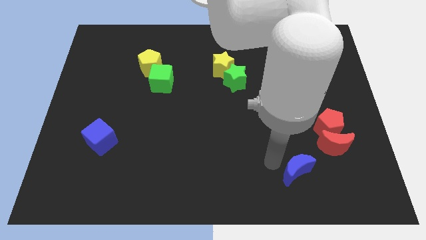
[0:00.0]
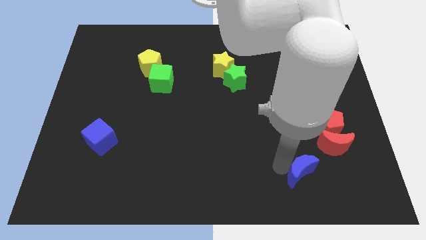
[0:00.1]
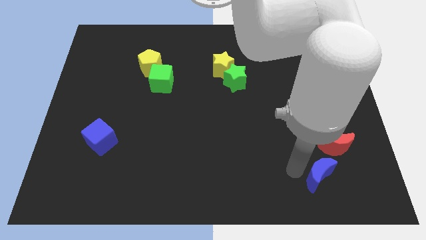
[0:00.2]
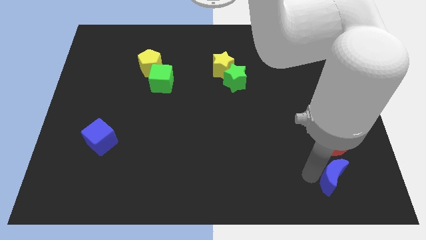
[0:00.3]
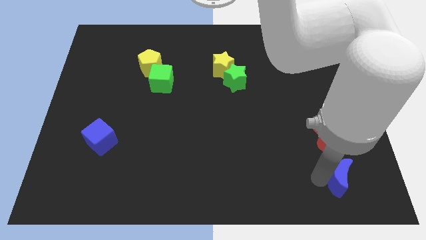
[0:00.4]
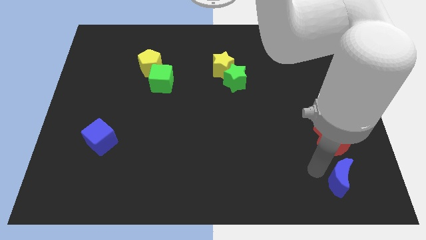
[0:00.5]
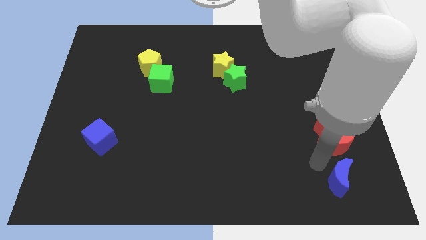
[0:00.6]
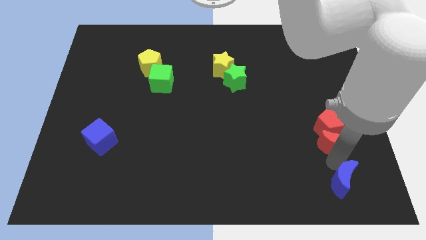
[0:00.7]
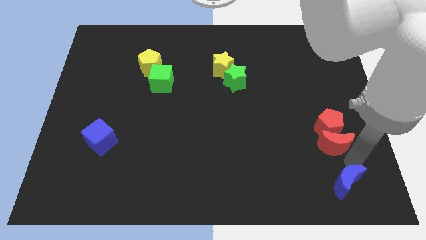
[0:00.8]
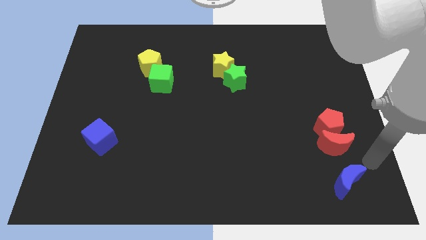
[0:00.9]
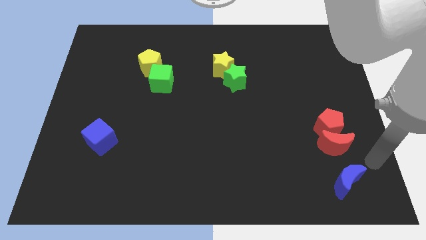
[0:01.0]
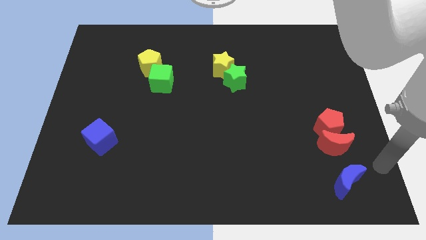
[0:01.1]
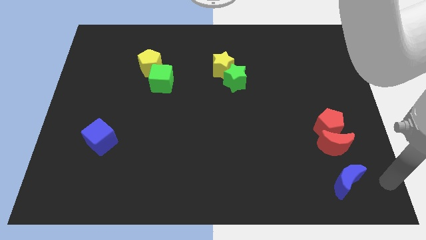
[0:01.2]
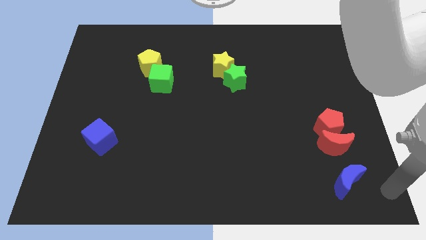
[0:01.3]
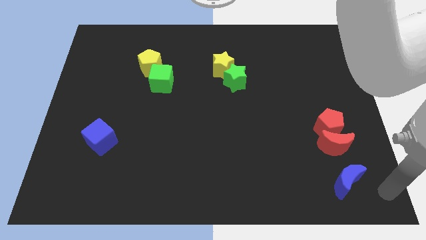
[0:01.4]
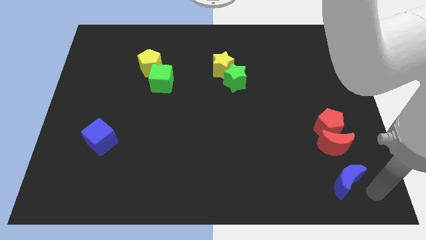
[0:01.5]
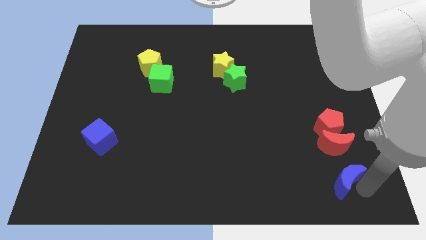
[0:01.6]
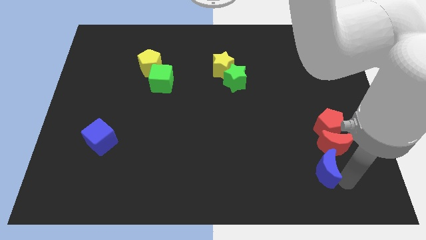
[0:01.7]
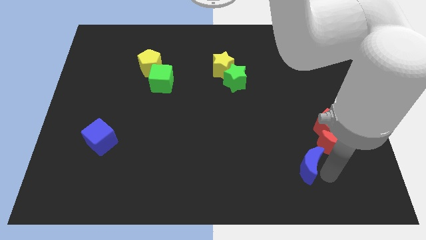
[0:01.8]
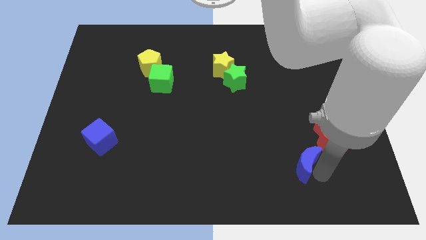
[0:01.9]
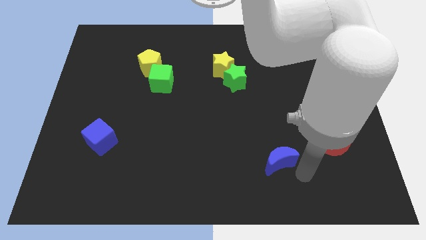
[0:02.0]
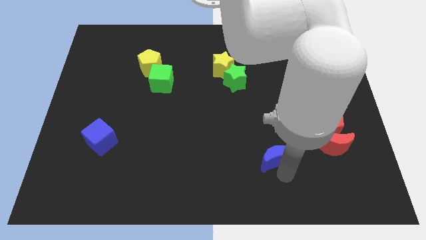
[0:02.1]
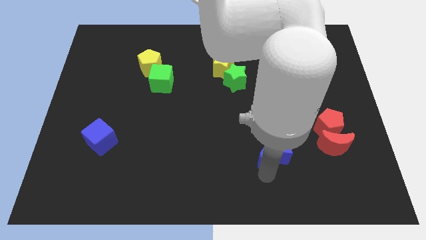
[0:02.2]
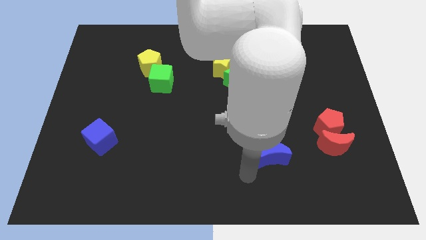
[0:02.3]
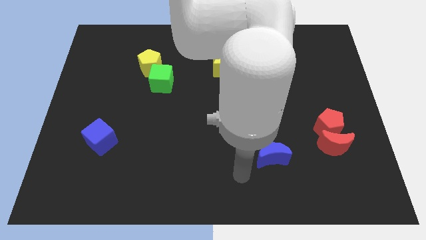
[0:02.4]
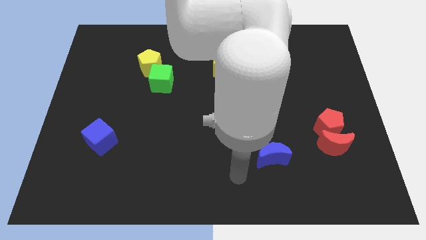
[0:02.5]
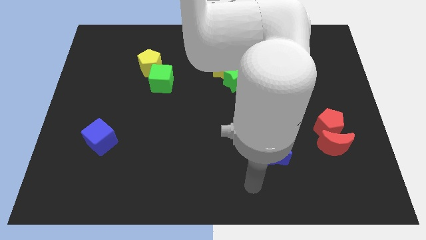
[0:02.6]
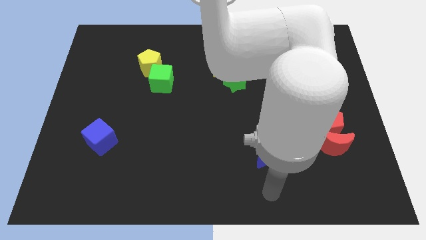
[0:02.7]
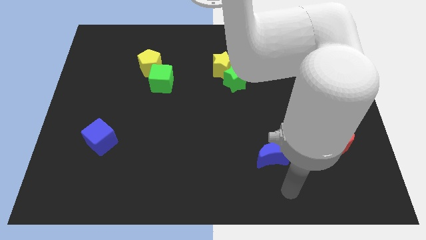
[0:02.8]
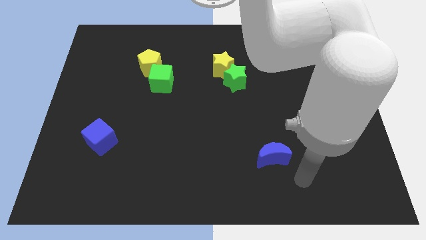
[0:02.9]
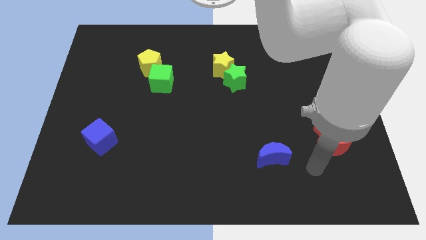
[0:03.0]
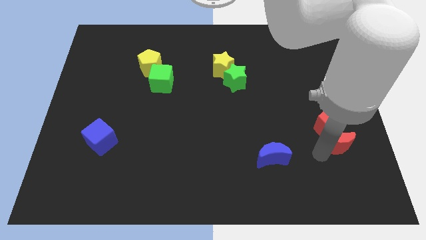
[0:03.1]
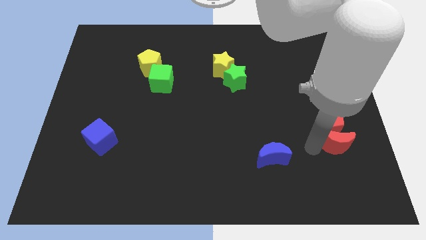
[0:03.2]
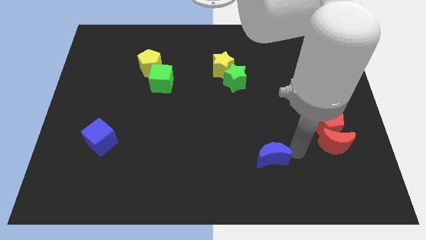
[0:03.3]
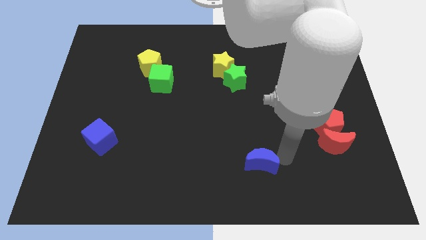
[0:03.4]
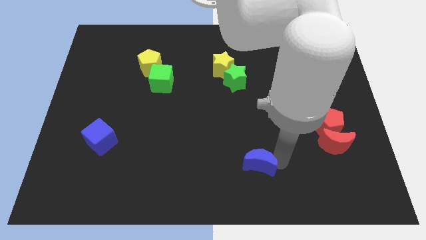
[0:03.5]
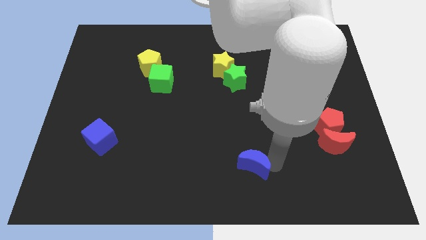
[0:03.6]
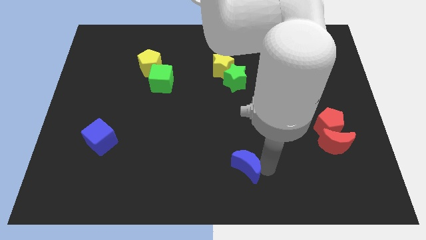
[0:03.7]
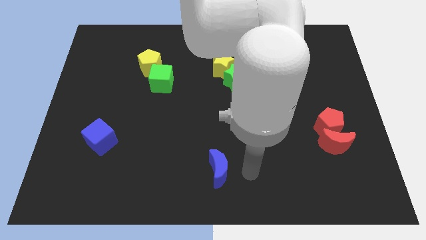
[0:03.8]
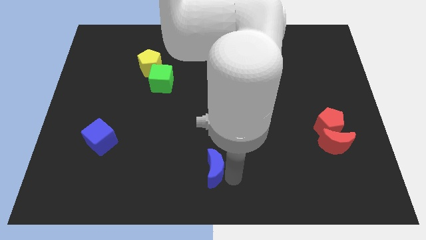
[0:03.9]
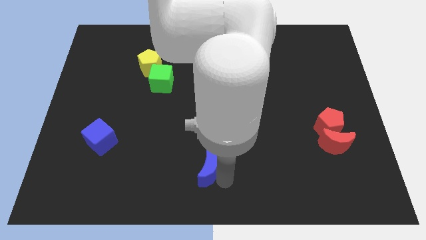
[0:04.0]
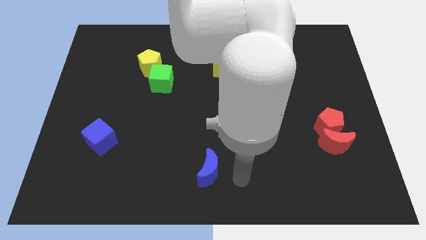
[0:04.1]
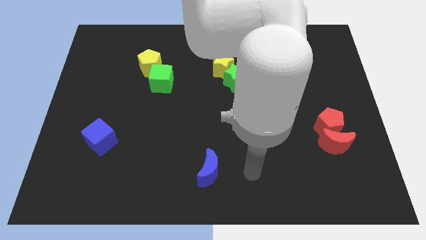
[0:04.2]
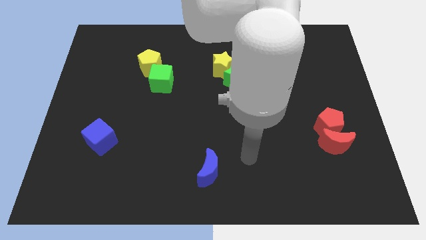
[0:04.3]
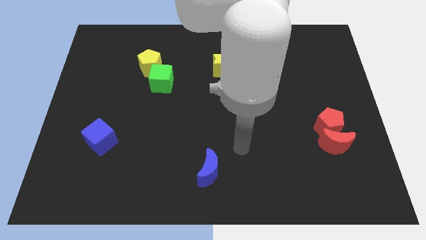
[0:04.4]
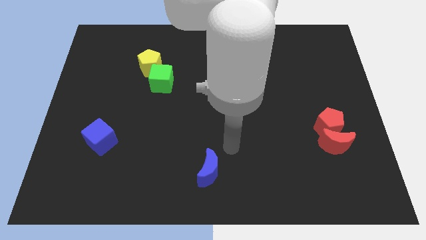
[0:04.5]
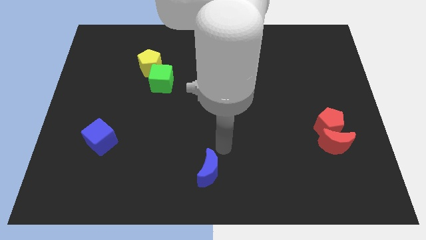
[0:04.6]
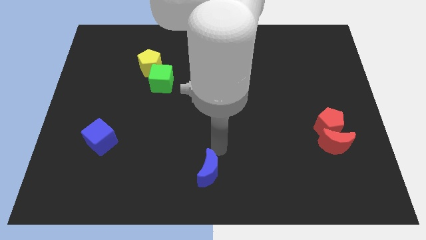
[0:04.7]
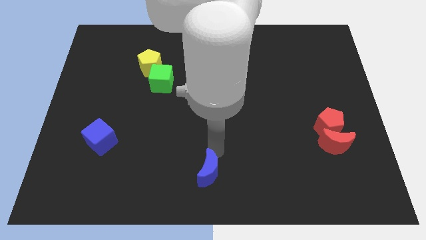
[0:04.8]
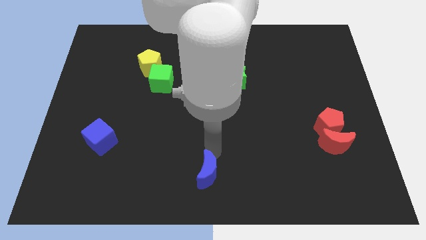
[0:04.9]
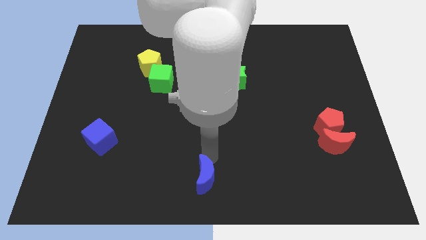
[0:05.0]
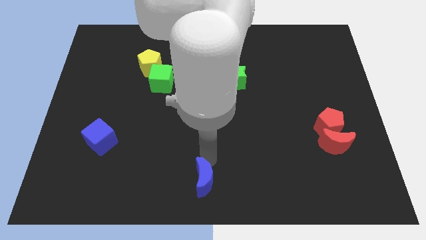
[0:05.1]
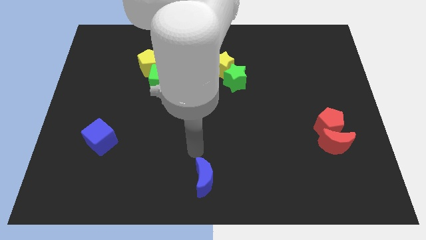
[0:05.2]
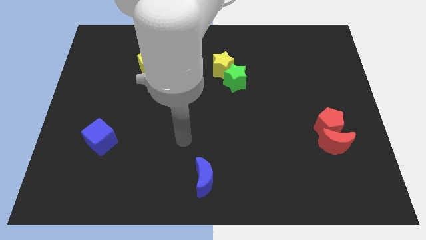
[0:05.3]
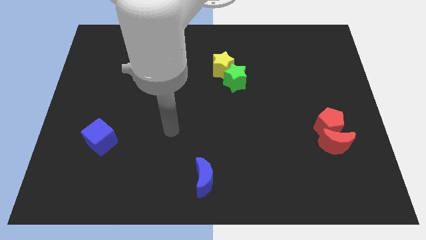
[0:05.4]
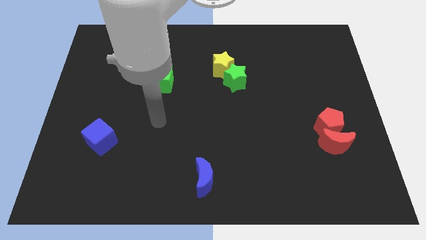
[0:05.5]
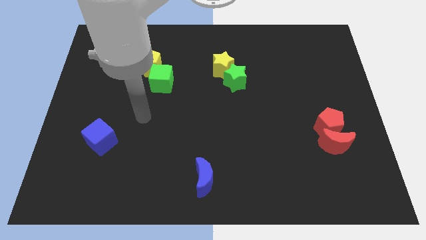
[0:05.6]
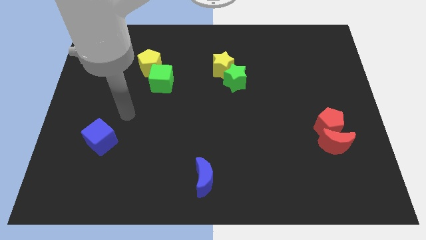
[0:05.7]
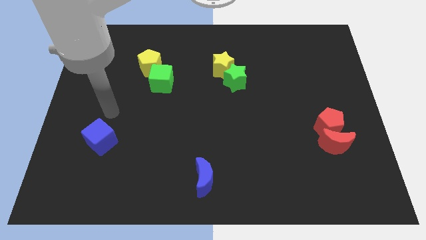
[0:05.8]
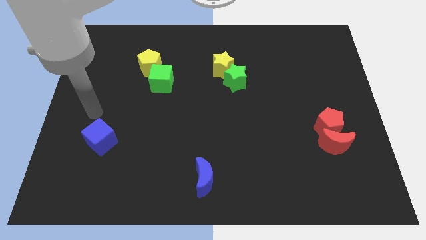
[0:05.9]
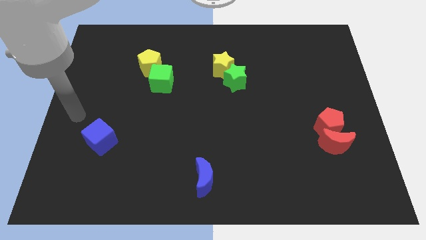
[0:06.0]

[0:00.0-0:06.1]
push the blue crescent to the center bottom of the board

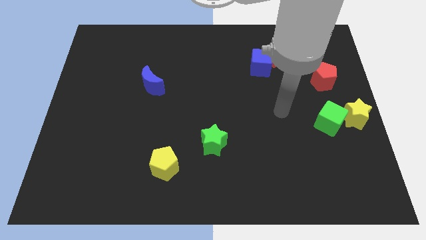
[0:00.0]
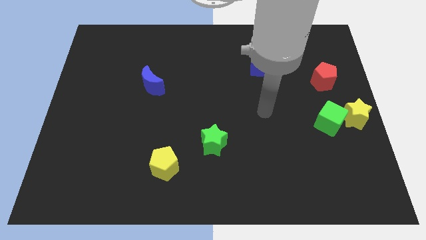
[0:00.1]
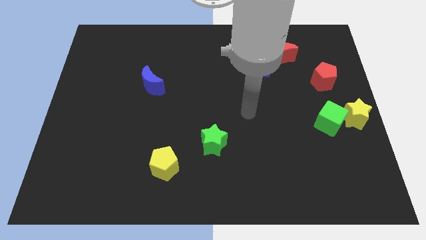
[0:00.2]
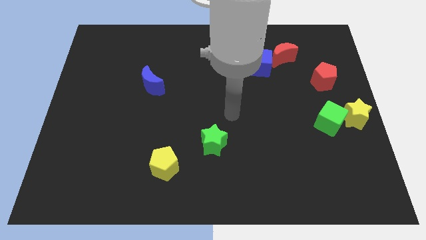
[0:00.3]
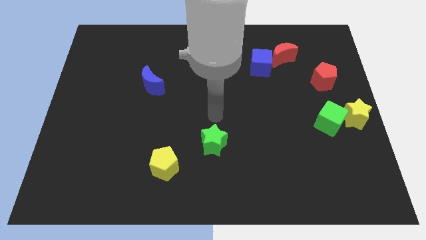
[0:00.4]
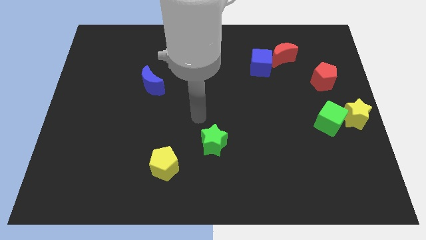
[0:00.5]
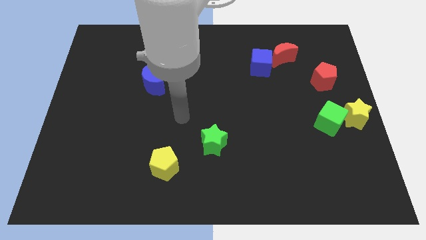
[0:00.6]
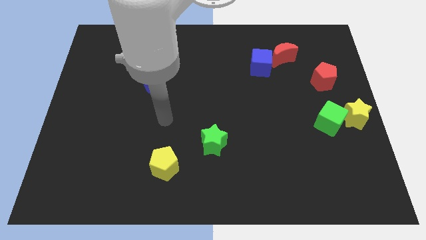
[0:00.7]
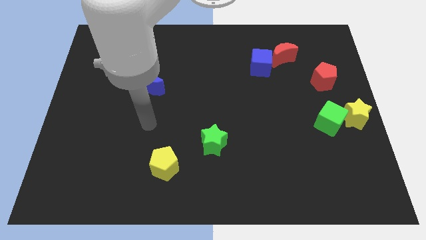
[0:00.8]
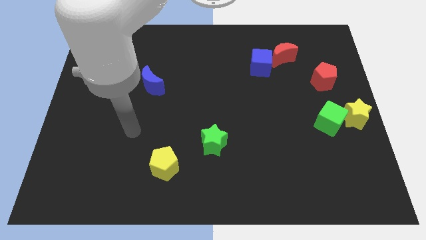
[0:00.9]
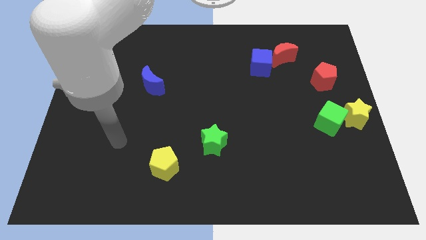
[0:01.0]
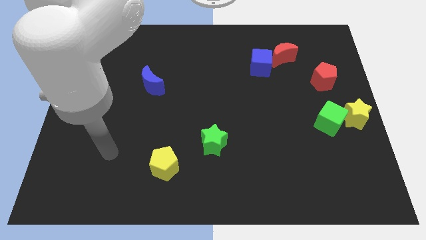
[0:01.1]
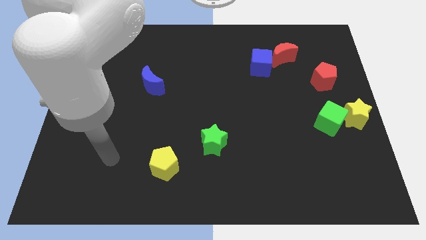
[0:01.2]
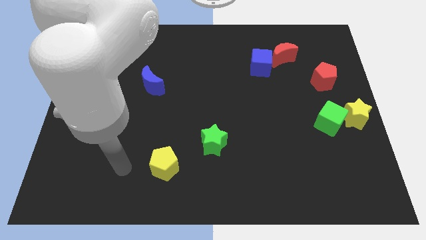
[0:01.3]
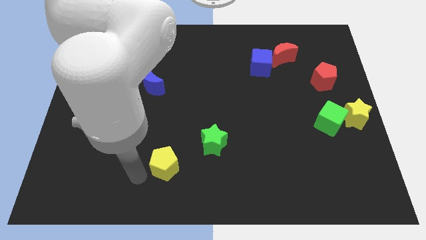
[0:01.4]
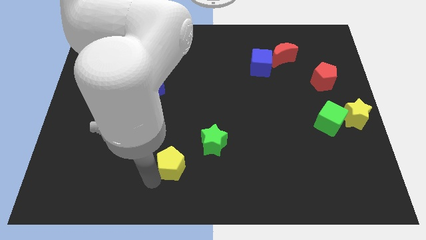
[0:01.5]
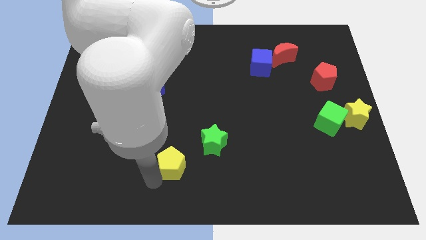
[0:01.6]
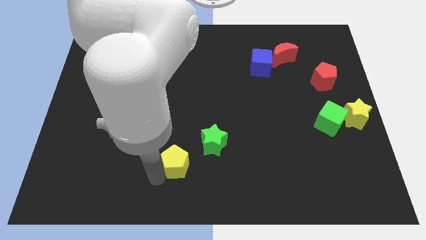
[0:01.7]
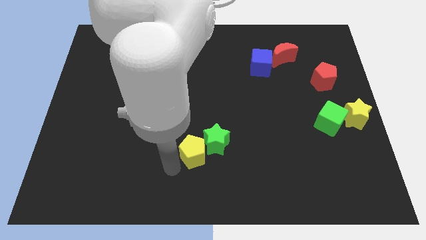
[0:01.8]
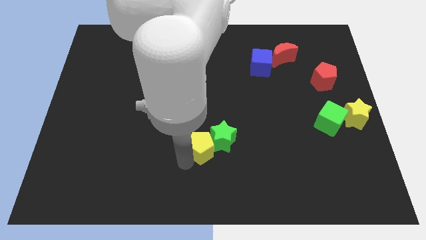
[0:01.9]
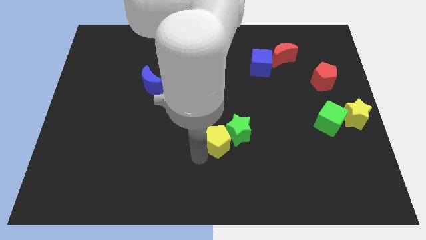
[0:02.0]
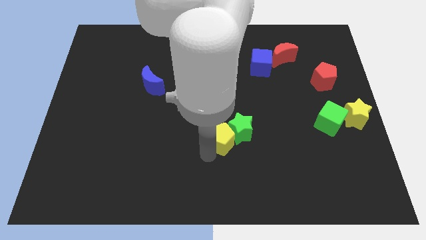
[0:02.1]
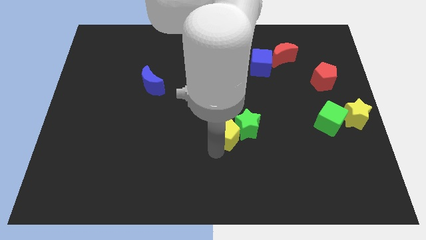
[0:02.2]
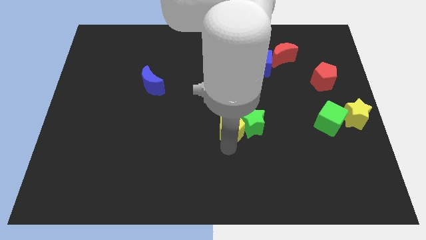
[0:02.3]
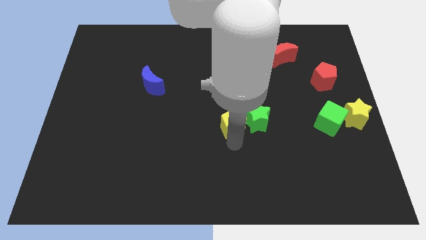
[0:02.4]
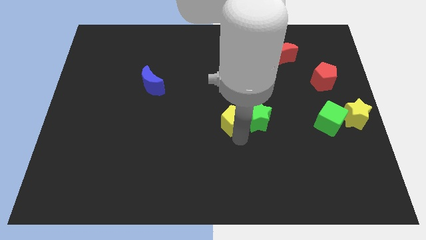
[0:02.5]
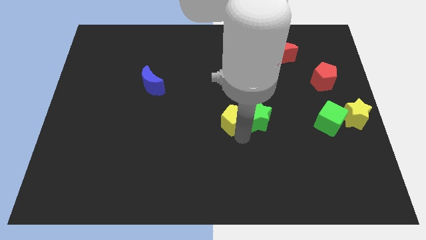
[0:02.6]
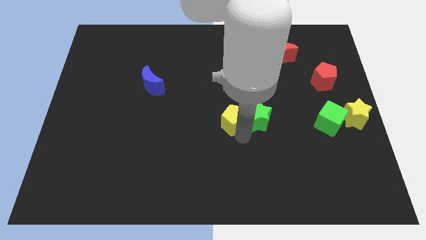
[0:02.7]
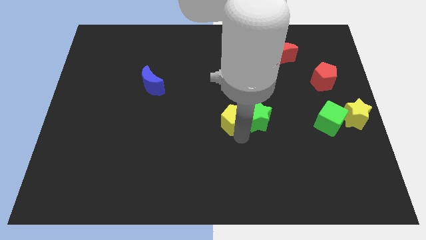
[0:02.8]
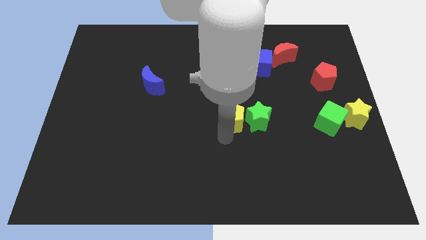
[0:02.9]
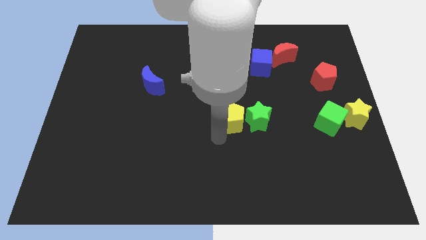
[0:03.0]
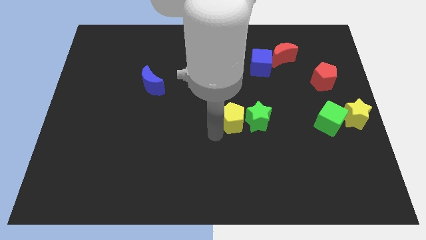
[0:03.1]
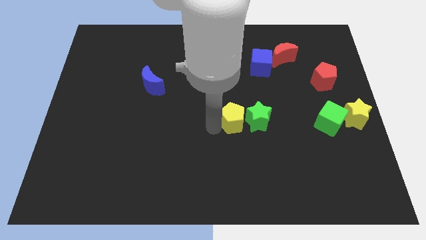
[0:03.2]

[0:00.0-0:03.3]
move the yellow pentagon to the left of the green star
